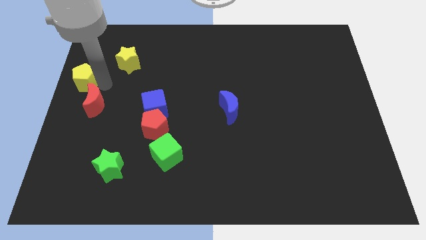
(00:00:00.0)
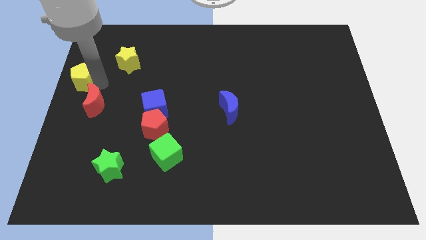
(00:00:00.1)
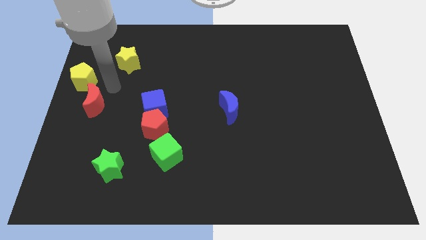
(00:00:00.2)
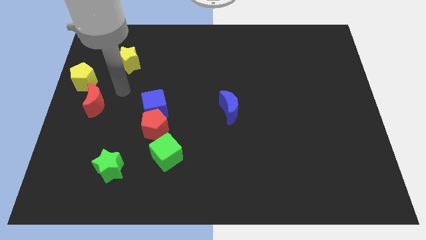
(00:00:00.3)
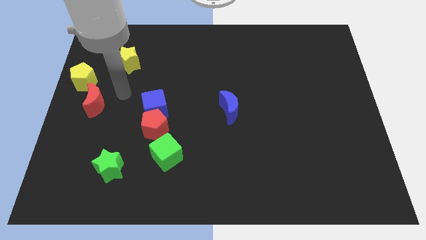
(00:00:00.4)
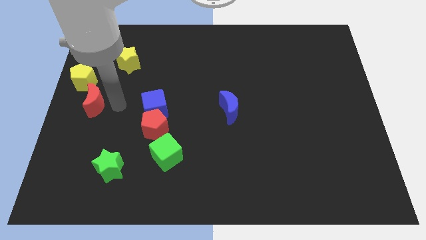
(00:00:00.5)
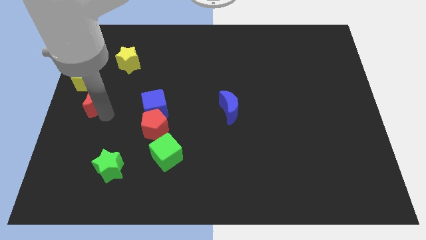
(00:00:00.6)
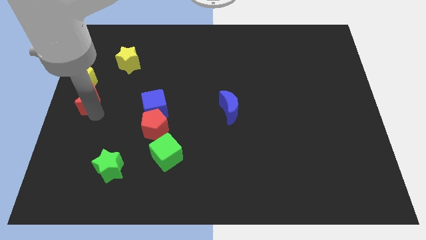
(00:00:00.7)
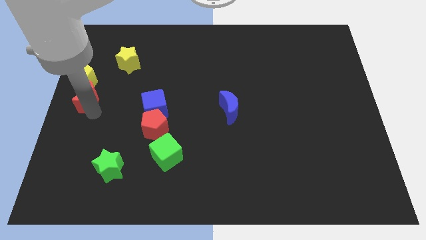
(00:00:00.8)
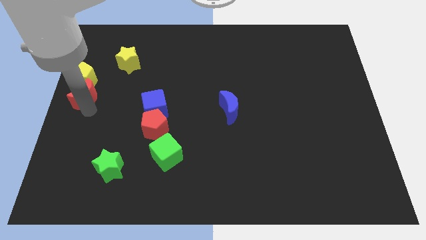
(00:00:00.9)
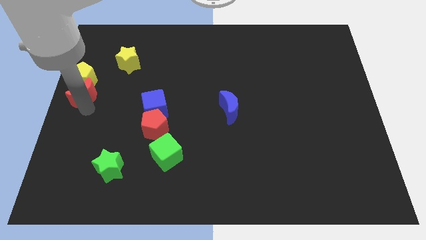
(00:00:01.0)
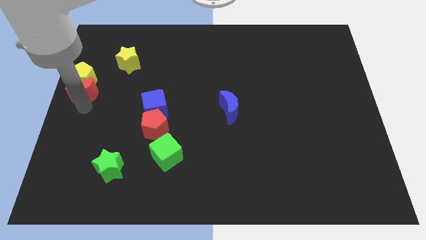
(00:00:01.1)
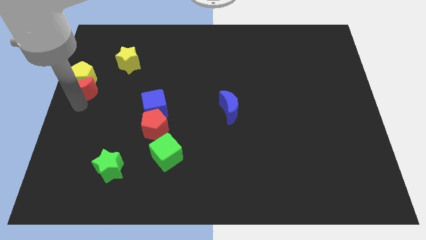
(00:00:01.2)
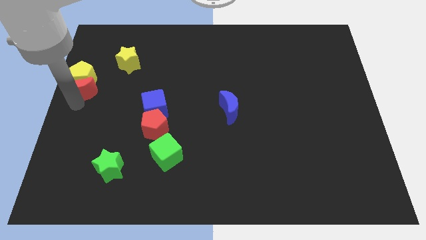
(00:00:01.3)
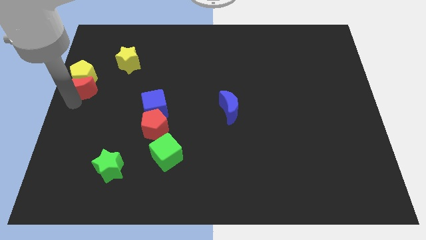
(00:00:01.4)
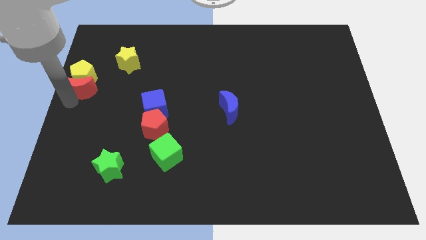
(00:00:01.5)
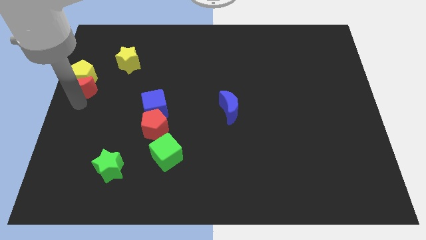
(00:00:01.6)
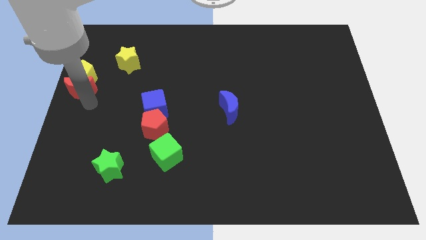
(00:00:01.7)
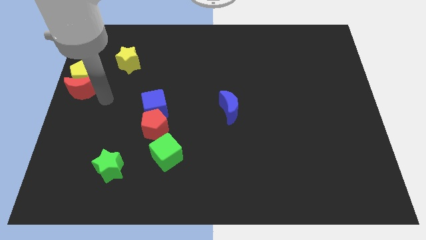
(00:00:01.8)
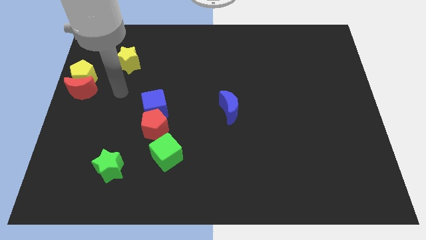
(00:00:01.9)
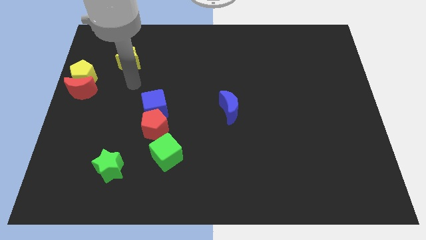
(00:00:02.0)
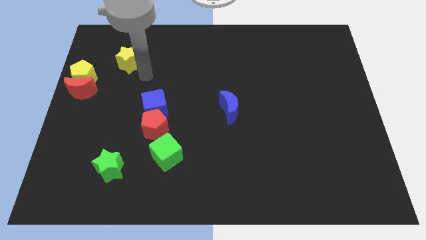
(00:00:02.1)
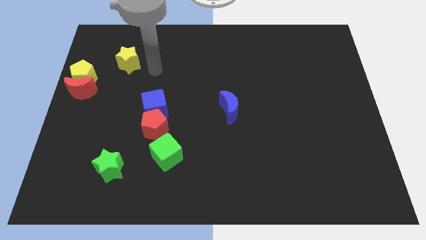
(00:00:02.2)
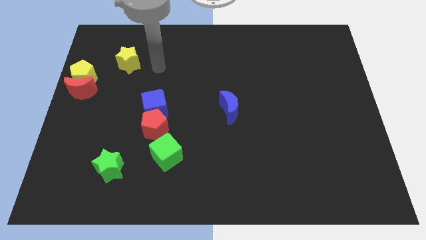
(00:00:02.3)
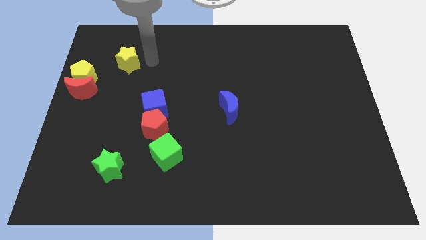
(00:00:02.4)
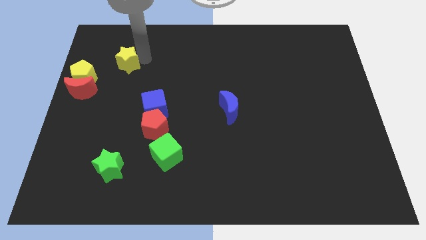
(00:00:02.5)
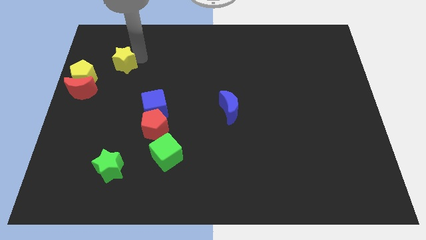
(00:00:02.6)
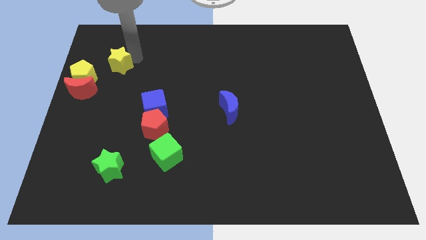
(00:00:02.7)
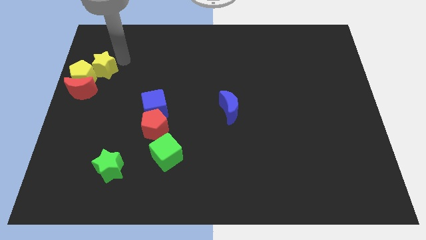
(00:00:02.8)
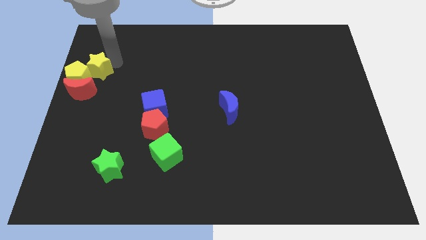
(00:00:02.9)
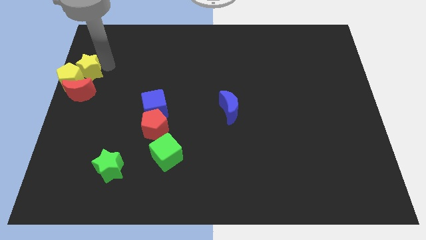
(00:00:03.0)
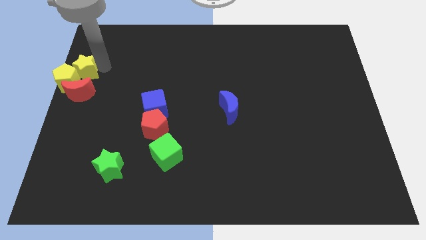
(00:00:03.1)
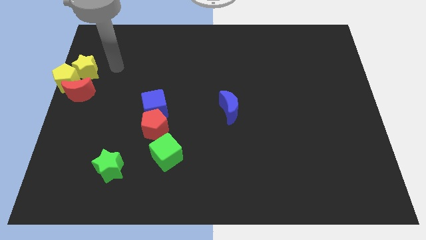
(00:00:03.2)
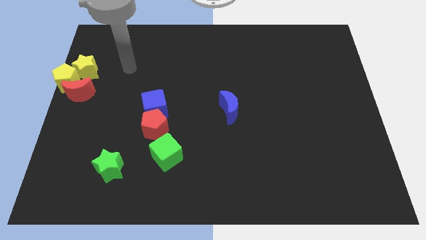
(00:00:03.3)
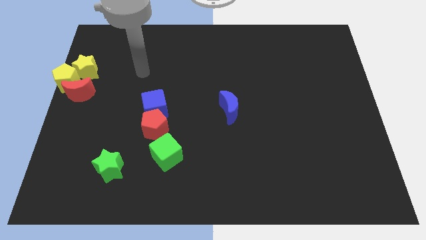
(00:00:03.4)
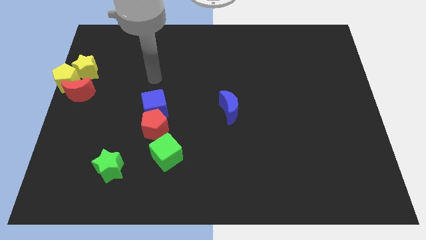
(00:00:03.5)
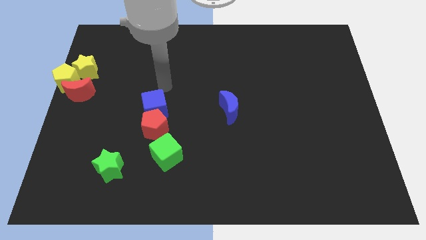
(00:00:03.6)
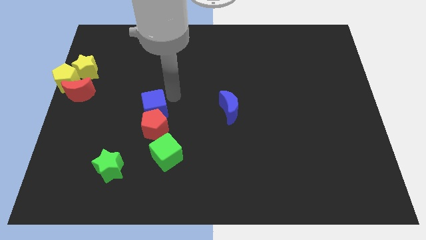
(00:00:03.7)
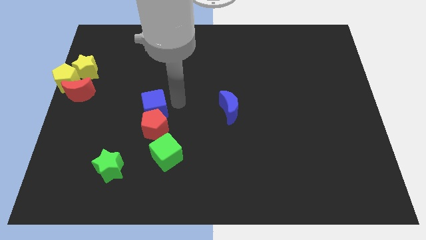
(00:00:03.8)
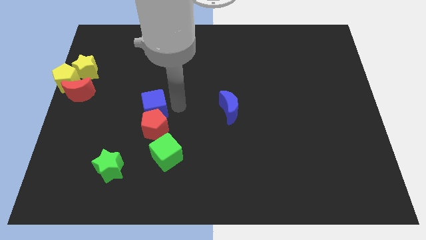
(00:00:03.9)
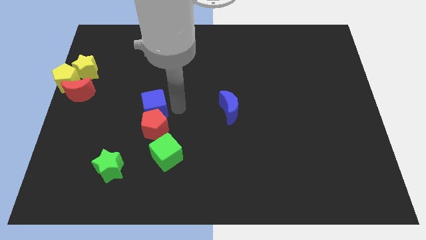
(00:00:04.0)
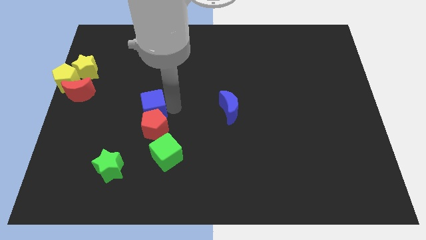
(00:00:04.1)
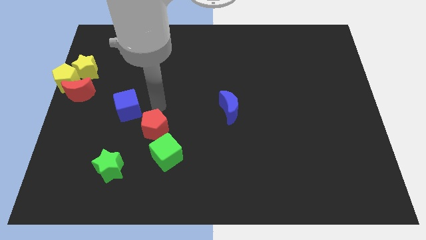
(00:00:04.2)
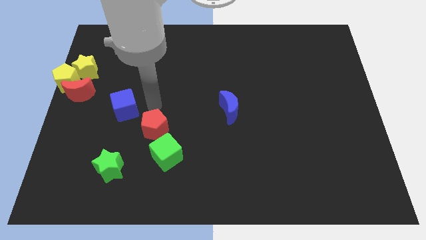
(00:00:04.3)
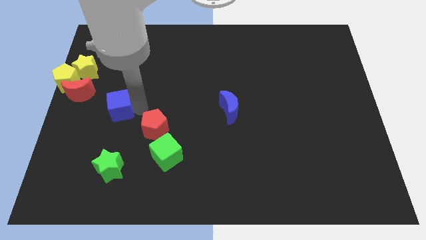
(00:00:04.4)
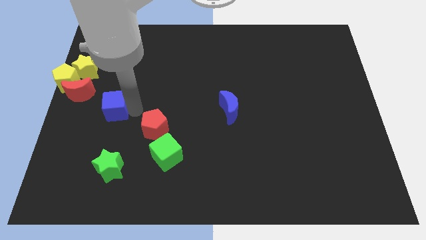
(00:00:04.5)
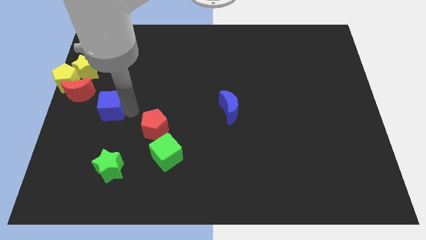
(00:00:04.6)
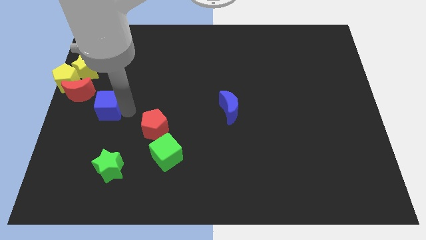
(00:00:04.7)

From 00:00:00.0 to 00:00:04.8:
slide the yellow star into the yellow pentagon

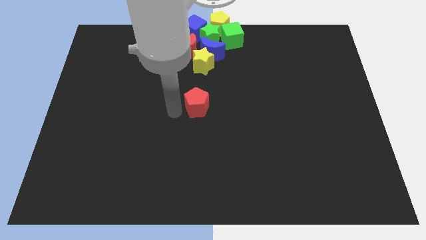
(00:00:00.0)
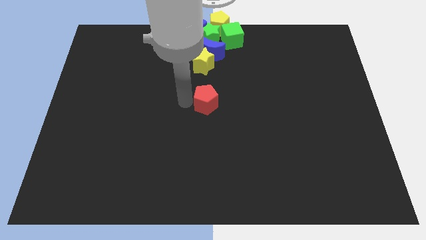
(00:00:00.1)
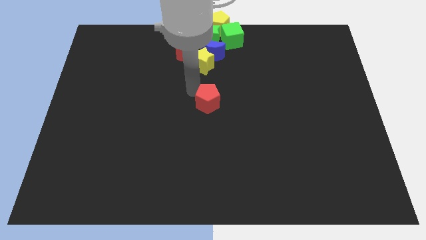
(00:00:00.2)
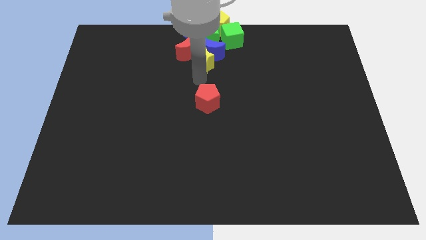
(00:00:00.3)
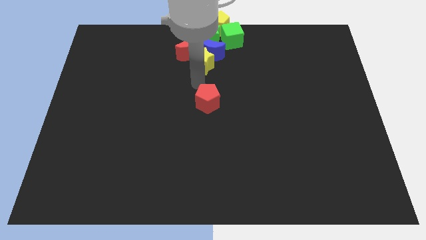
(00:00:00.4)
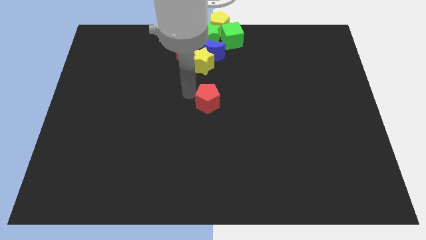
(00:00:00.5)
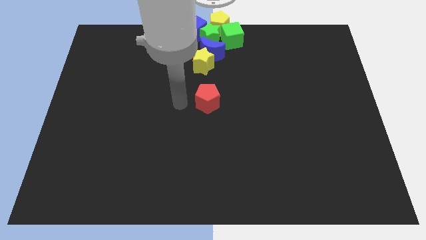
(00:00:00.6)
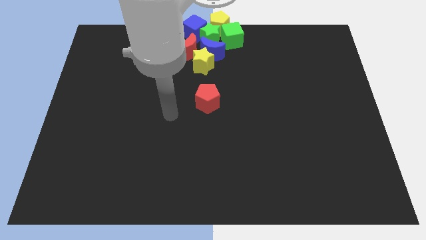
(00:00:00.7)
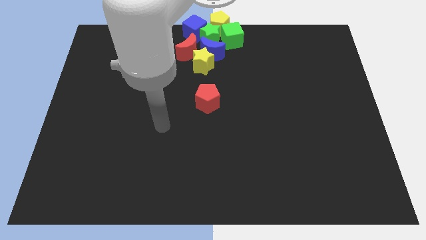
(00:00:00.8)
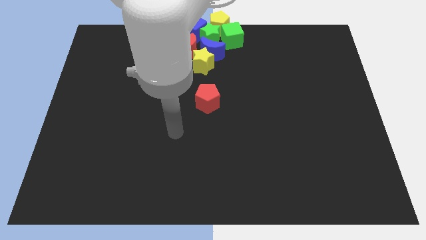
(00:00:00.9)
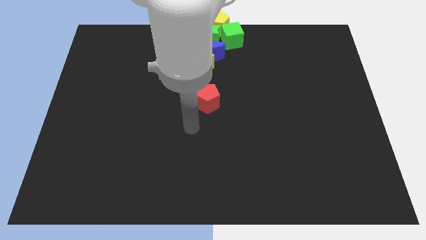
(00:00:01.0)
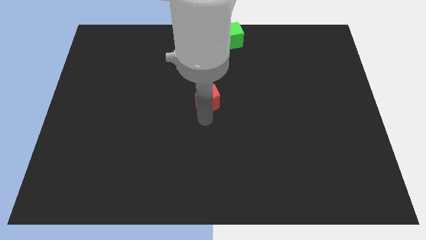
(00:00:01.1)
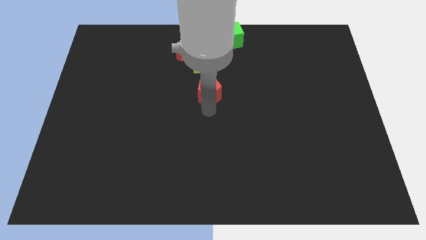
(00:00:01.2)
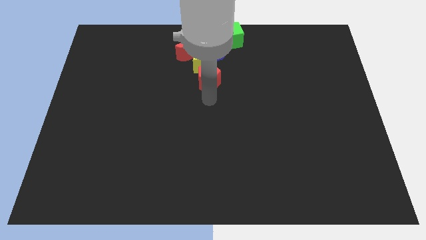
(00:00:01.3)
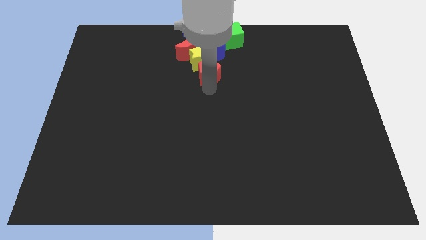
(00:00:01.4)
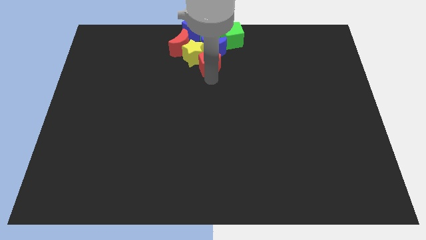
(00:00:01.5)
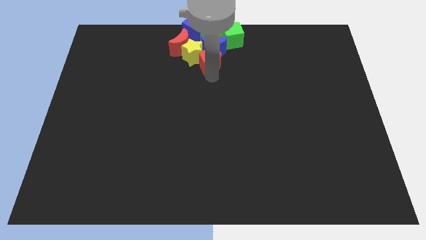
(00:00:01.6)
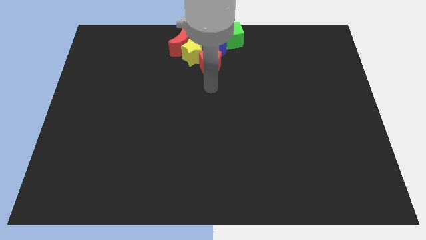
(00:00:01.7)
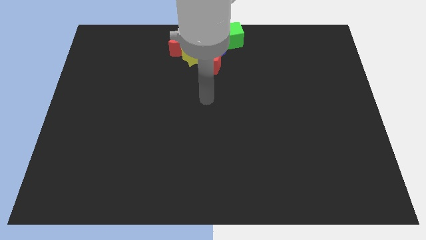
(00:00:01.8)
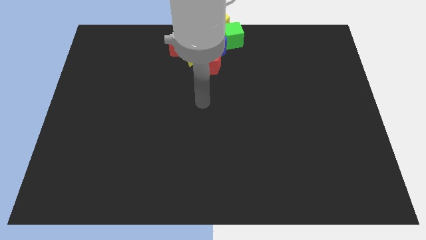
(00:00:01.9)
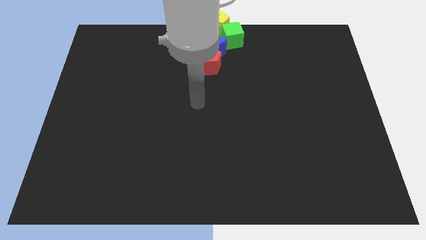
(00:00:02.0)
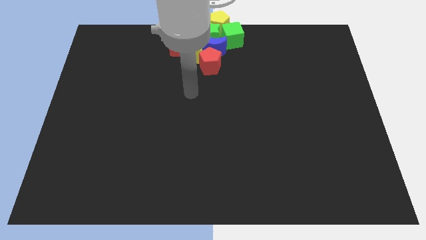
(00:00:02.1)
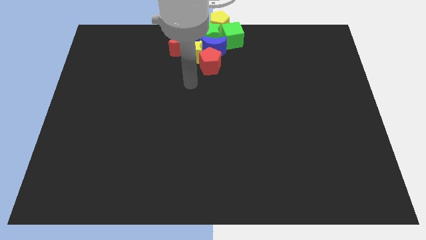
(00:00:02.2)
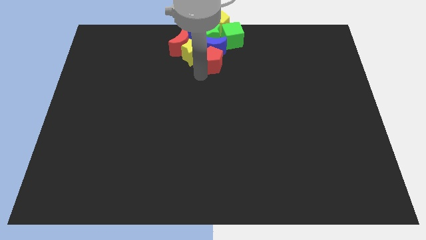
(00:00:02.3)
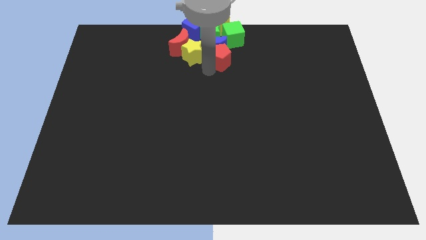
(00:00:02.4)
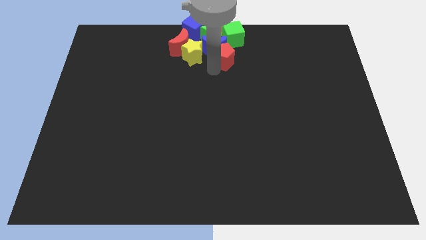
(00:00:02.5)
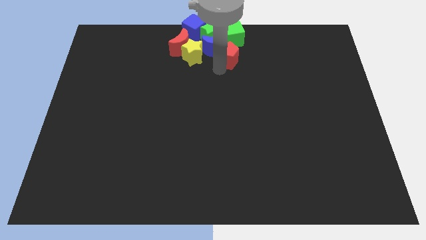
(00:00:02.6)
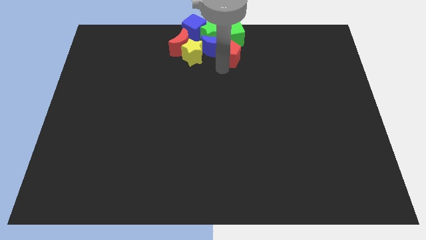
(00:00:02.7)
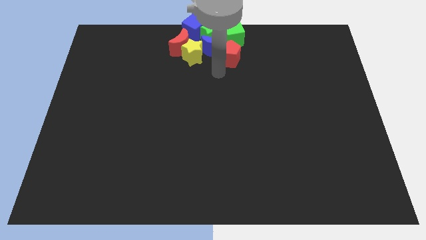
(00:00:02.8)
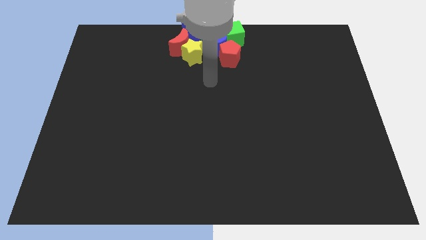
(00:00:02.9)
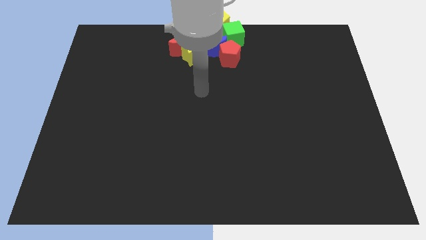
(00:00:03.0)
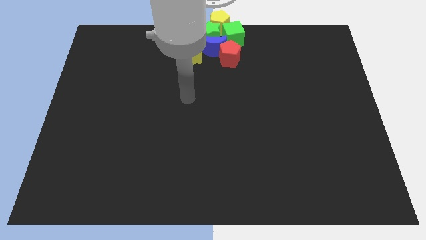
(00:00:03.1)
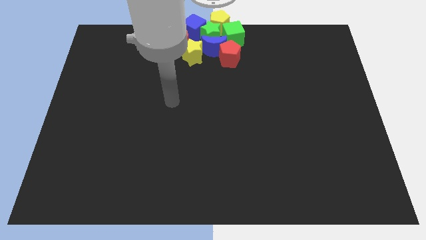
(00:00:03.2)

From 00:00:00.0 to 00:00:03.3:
place the red pentagon below the green cube

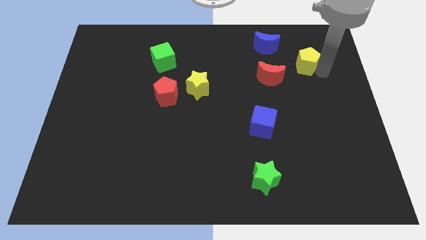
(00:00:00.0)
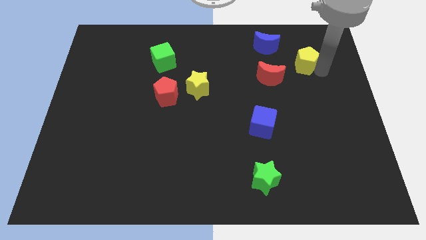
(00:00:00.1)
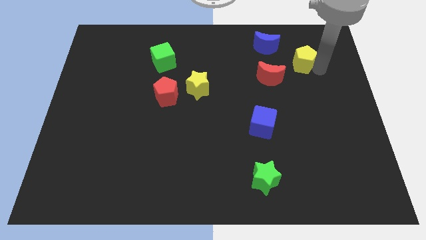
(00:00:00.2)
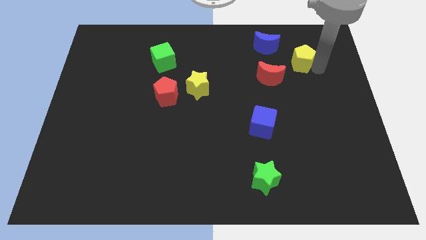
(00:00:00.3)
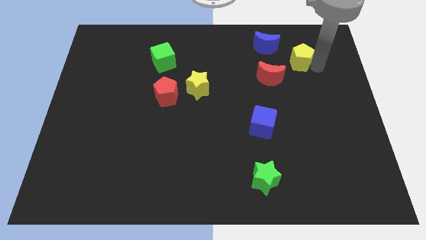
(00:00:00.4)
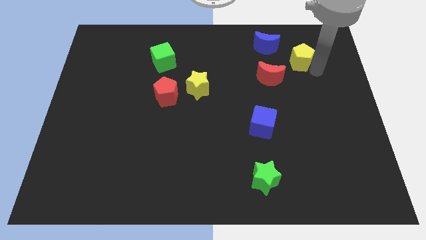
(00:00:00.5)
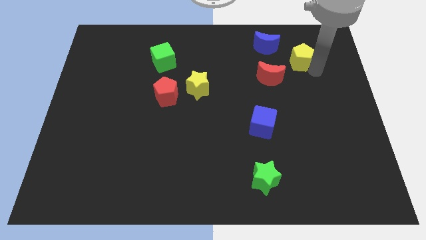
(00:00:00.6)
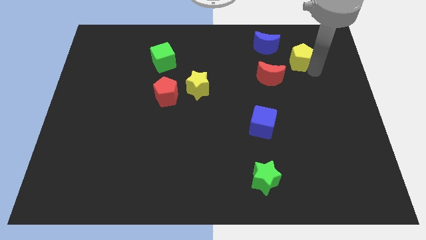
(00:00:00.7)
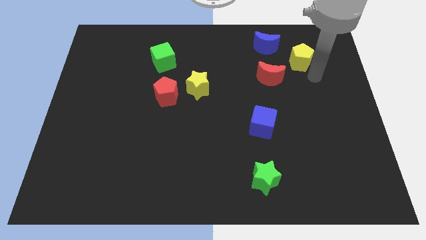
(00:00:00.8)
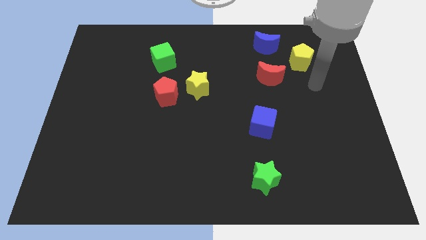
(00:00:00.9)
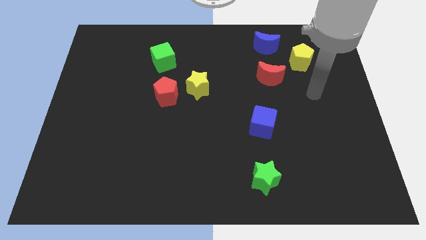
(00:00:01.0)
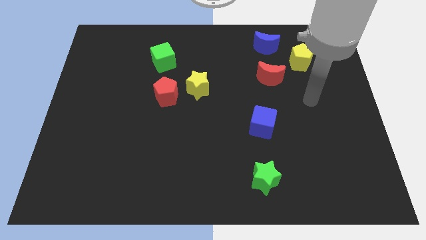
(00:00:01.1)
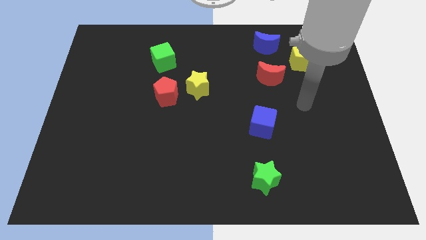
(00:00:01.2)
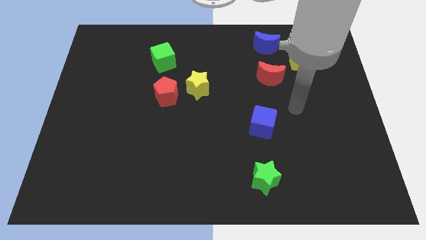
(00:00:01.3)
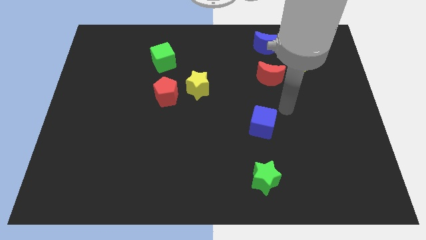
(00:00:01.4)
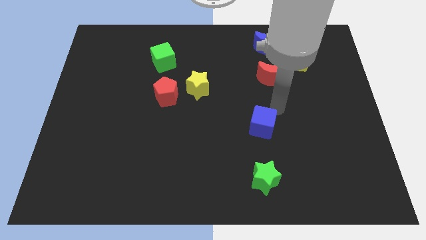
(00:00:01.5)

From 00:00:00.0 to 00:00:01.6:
slightly move the yellow pentagon to the top
